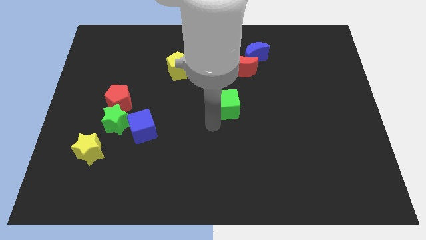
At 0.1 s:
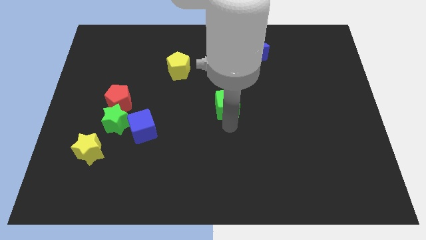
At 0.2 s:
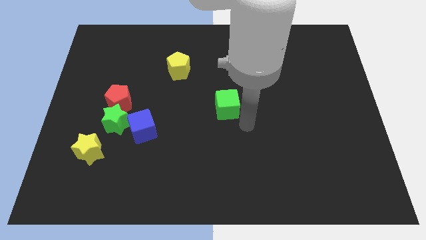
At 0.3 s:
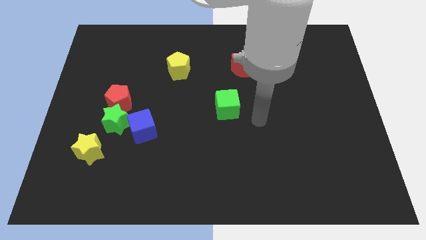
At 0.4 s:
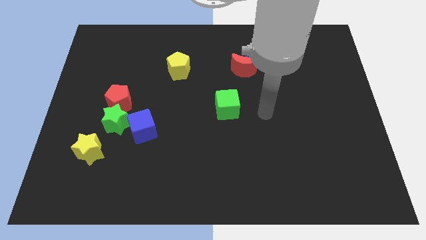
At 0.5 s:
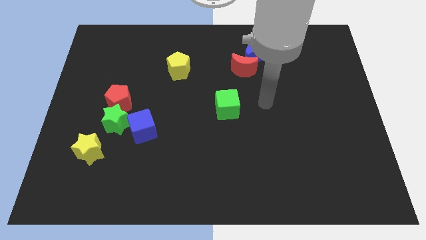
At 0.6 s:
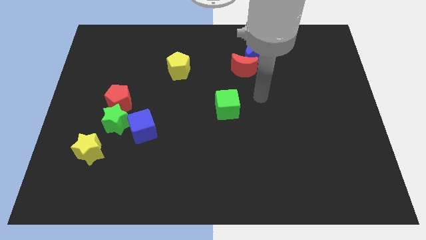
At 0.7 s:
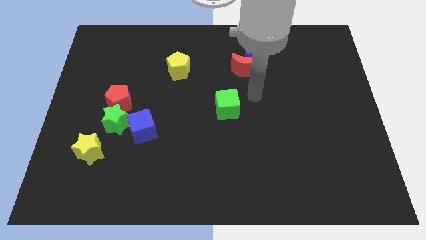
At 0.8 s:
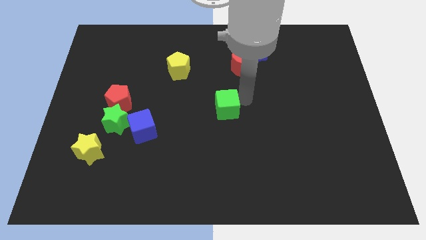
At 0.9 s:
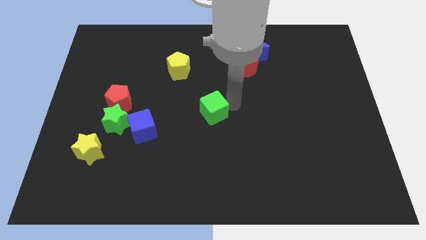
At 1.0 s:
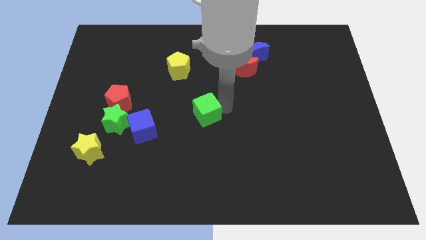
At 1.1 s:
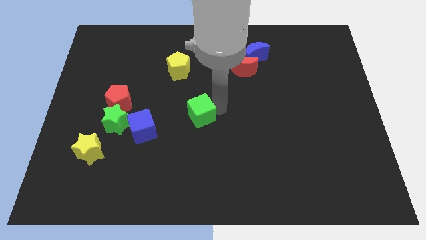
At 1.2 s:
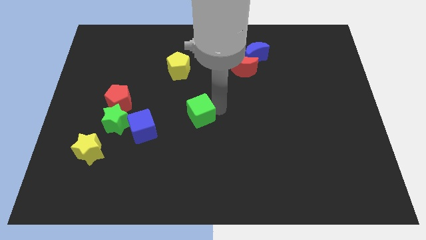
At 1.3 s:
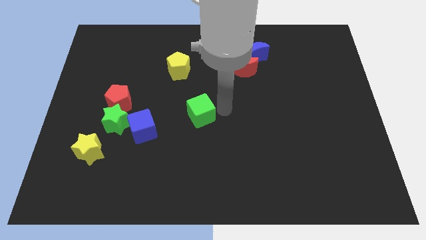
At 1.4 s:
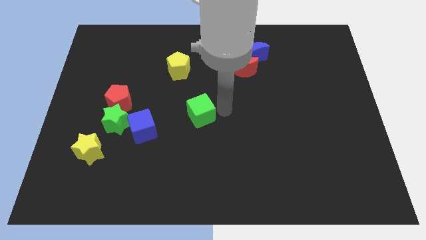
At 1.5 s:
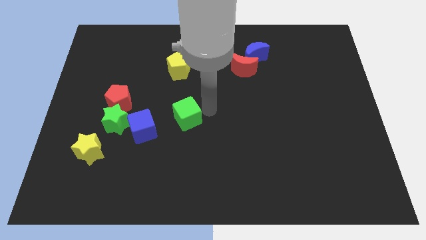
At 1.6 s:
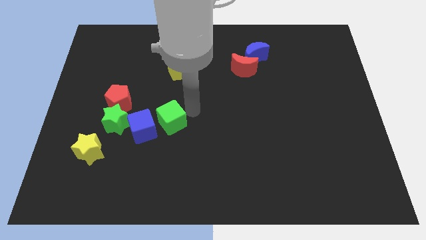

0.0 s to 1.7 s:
push the green cube towards the blue cube

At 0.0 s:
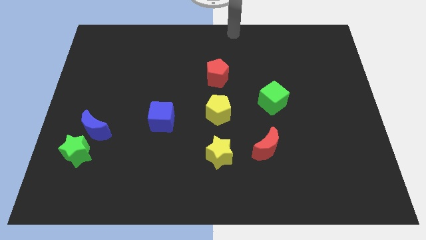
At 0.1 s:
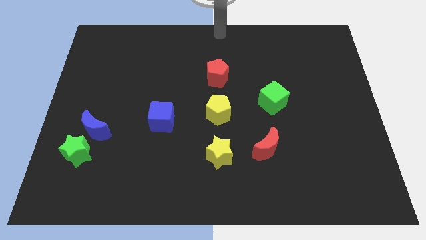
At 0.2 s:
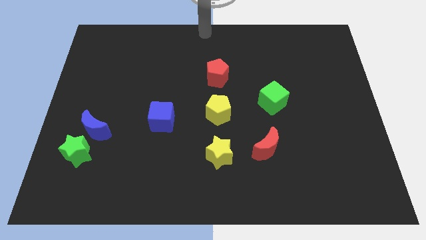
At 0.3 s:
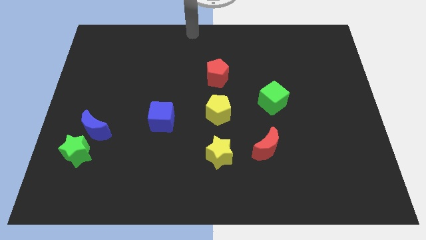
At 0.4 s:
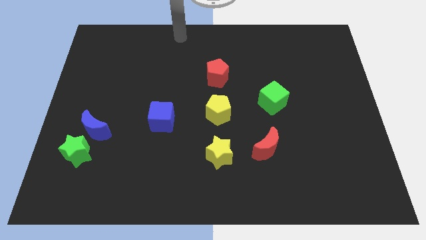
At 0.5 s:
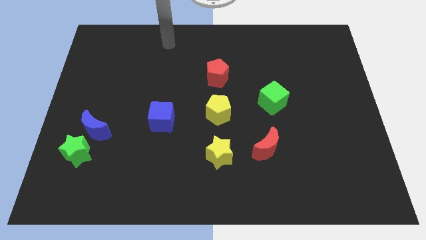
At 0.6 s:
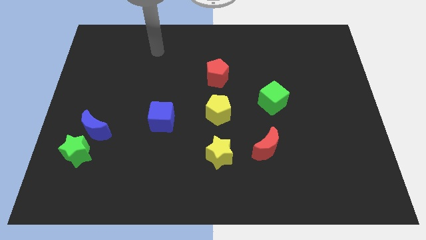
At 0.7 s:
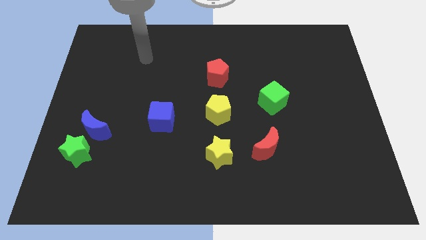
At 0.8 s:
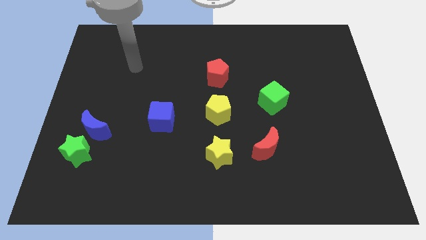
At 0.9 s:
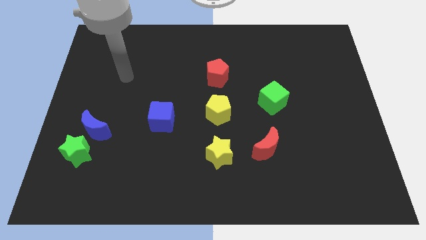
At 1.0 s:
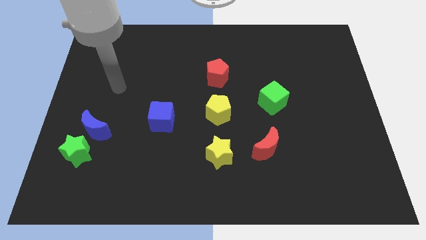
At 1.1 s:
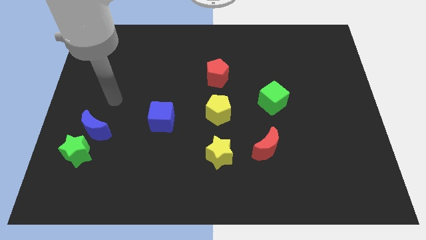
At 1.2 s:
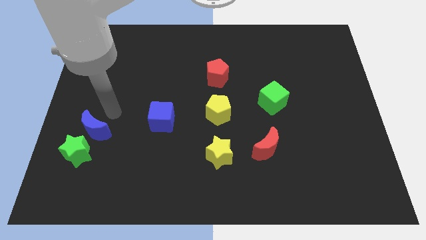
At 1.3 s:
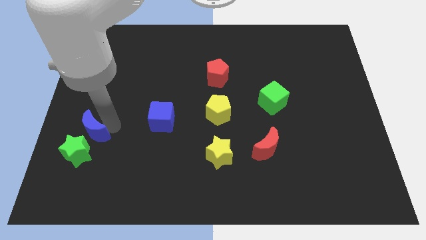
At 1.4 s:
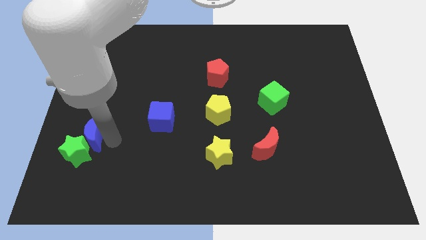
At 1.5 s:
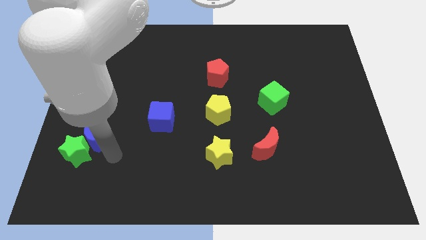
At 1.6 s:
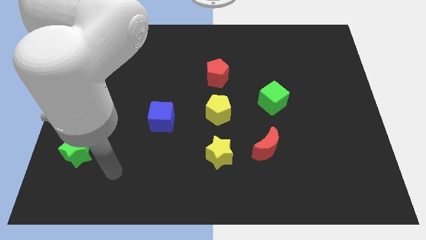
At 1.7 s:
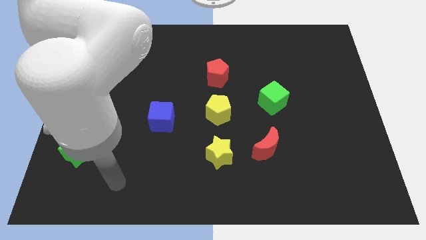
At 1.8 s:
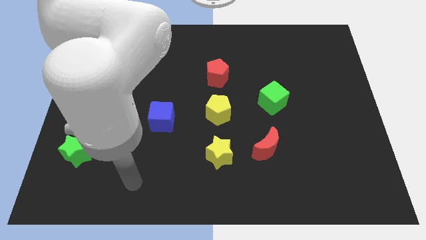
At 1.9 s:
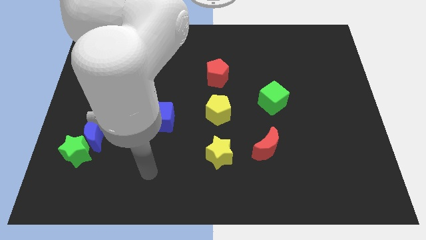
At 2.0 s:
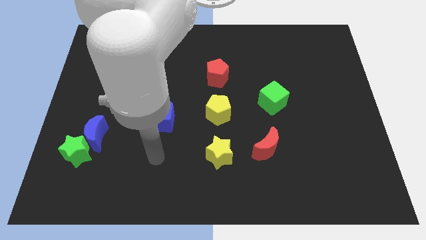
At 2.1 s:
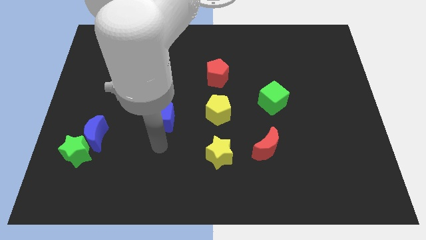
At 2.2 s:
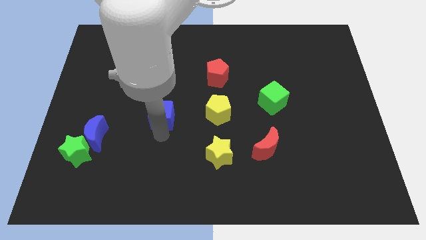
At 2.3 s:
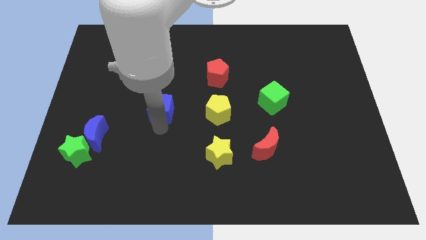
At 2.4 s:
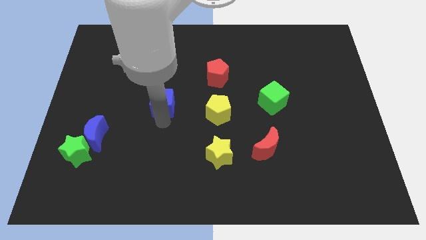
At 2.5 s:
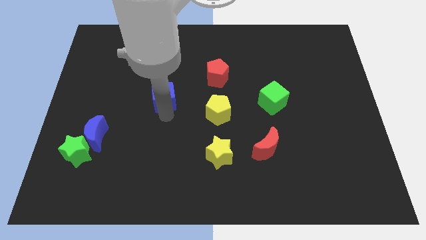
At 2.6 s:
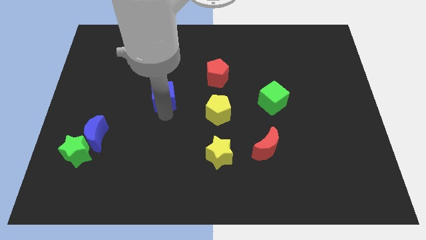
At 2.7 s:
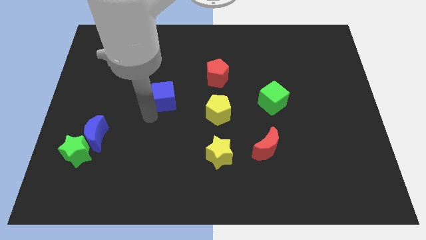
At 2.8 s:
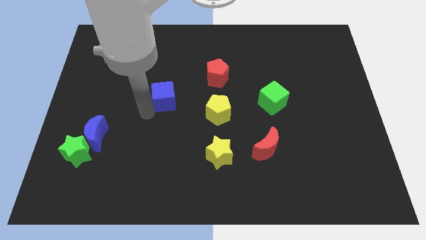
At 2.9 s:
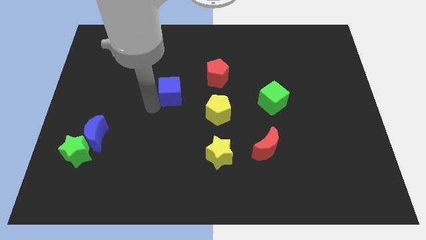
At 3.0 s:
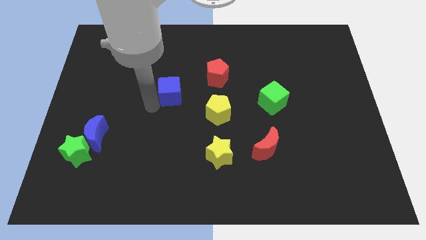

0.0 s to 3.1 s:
push blue cube diagonal to red pentagon

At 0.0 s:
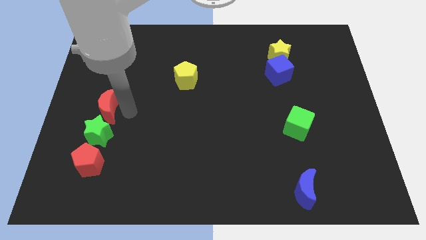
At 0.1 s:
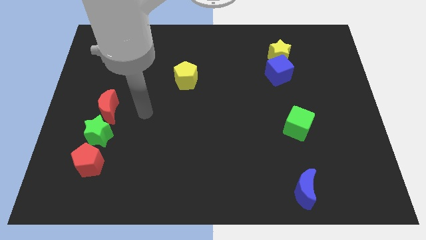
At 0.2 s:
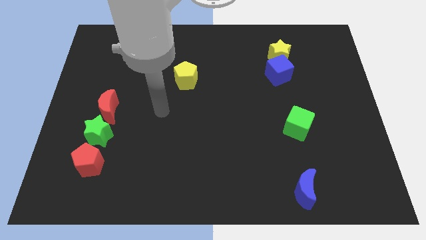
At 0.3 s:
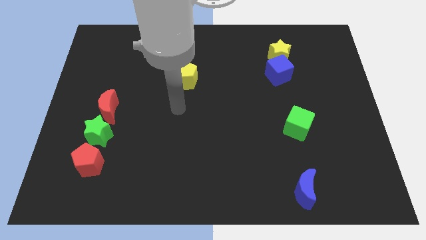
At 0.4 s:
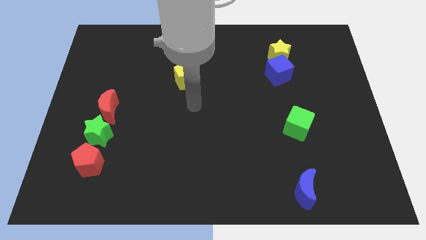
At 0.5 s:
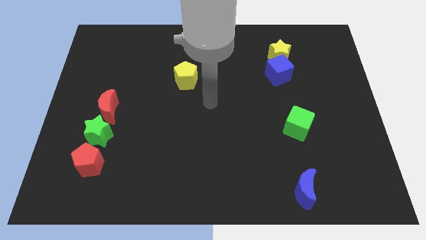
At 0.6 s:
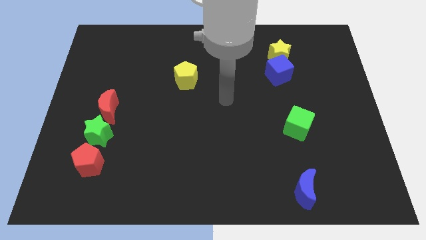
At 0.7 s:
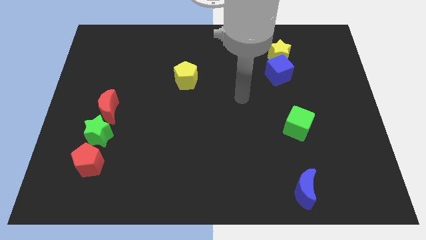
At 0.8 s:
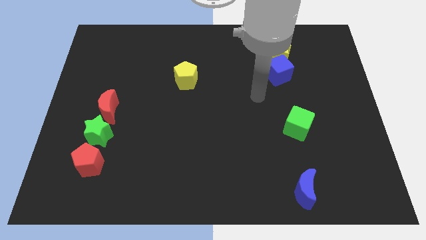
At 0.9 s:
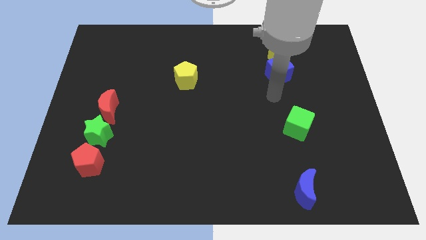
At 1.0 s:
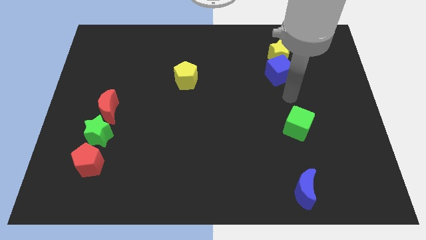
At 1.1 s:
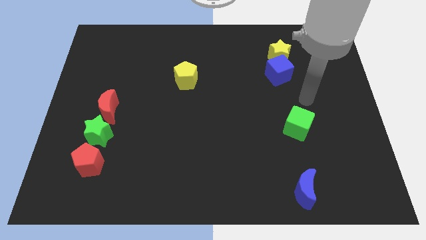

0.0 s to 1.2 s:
point your arm to the bottom of the blue cube

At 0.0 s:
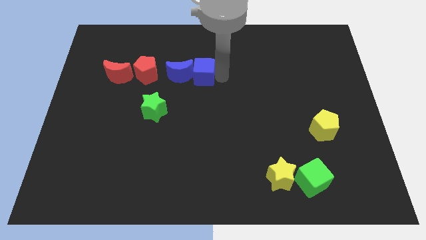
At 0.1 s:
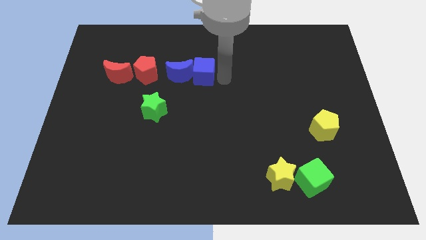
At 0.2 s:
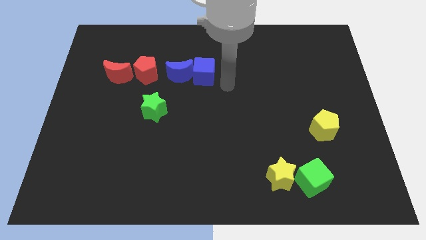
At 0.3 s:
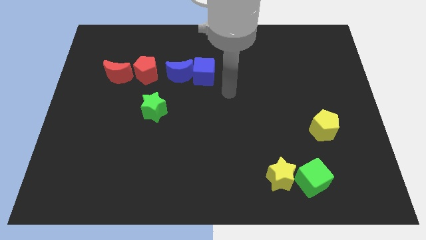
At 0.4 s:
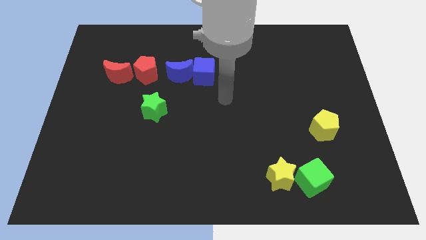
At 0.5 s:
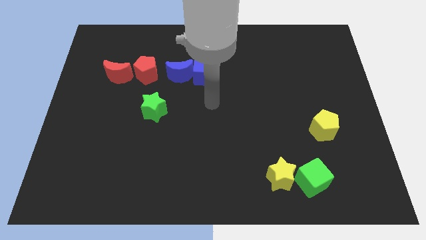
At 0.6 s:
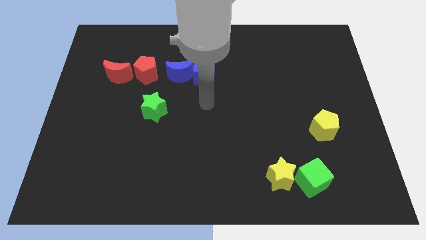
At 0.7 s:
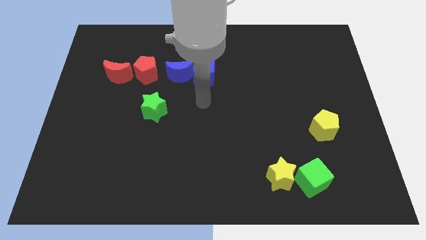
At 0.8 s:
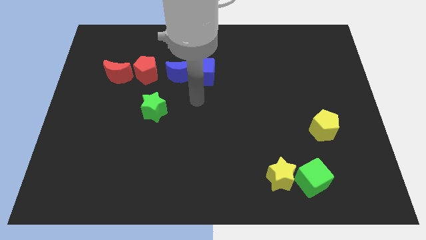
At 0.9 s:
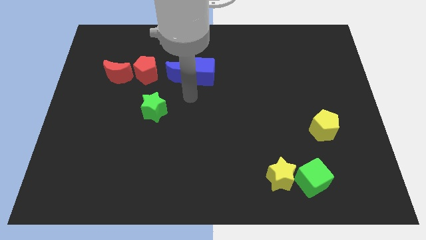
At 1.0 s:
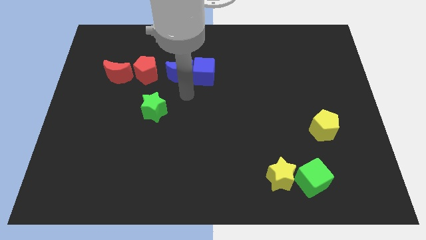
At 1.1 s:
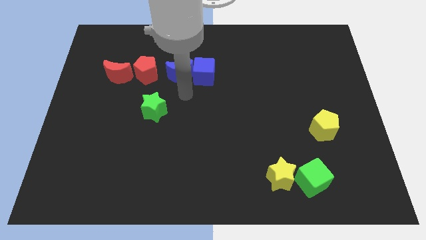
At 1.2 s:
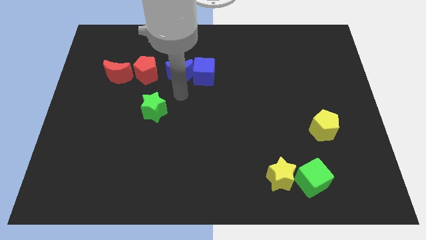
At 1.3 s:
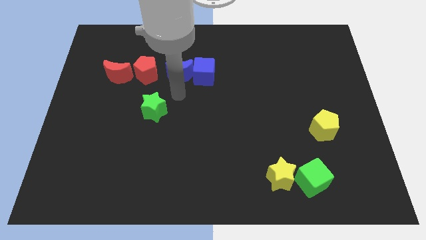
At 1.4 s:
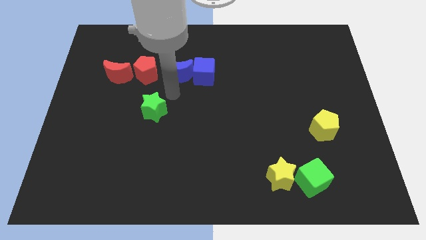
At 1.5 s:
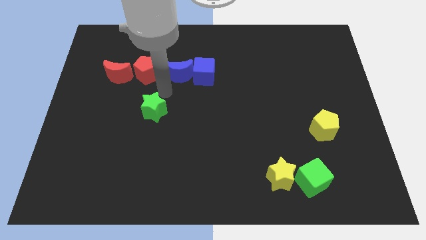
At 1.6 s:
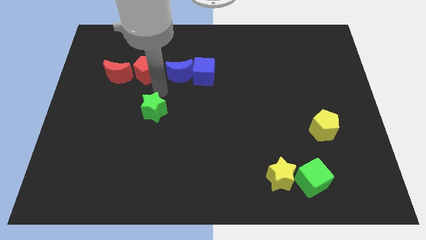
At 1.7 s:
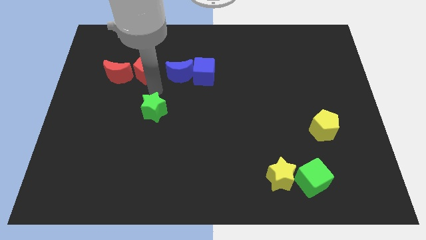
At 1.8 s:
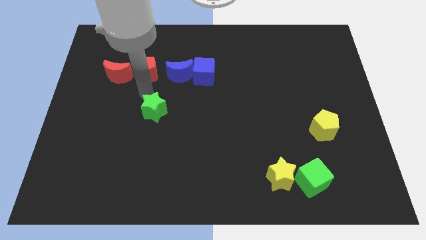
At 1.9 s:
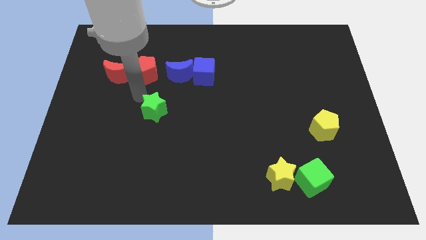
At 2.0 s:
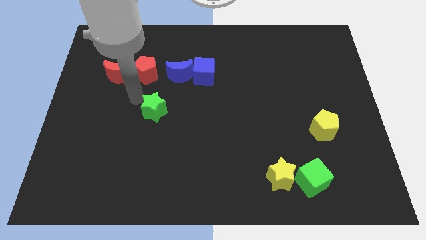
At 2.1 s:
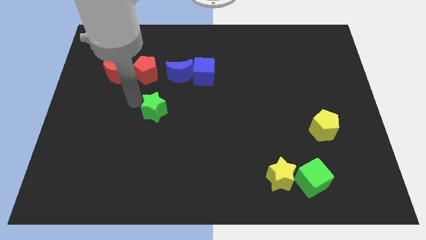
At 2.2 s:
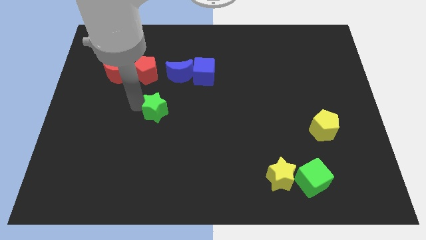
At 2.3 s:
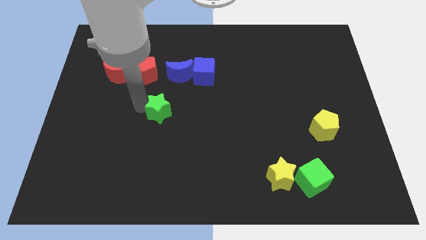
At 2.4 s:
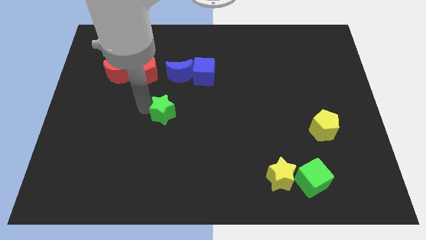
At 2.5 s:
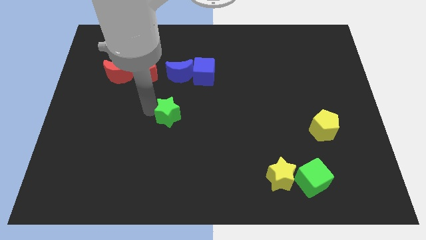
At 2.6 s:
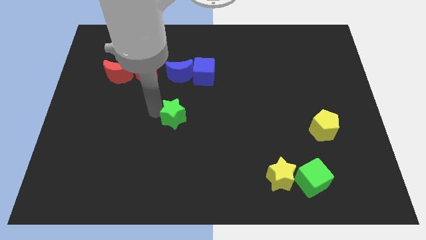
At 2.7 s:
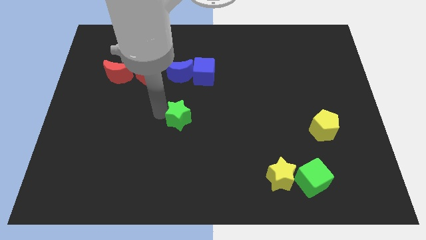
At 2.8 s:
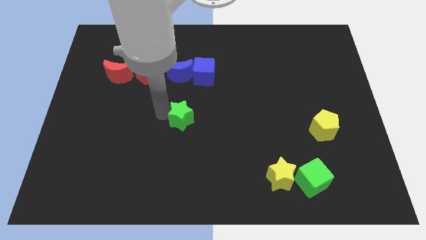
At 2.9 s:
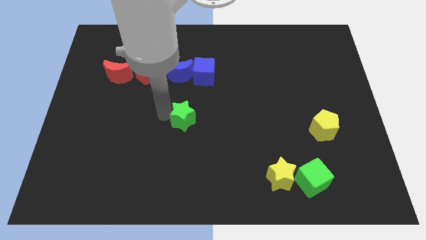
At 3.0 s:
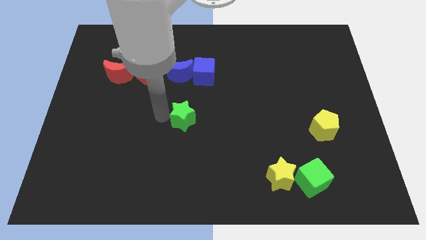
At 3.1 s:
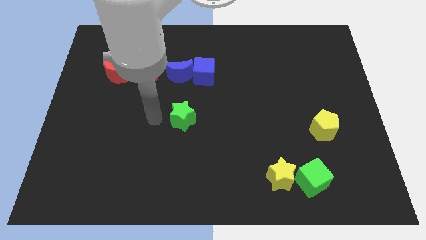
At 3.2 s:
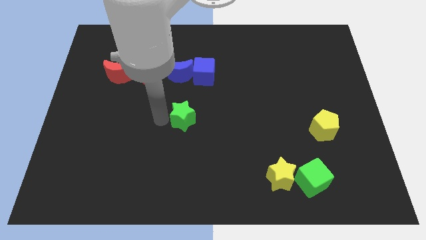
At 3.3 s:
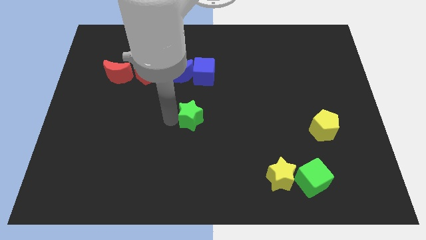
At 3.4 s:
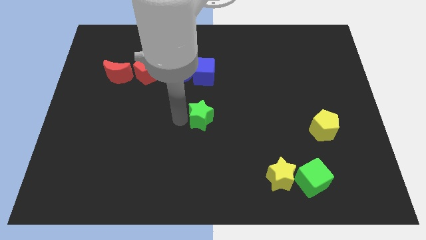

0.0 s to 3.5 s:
push the green star towards the center of the board
